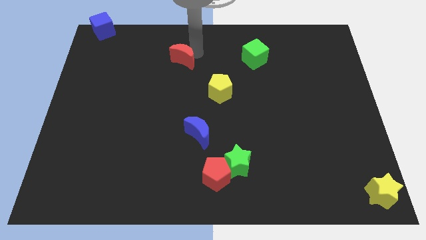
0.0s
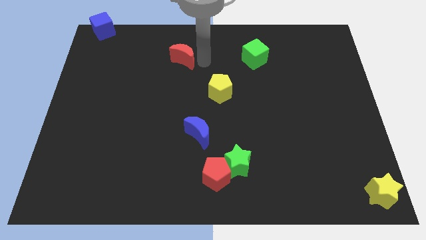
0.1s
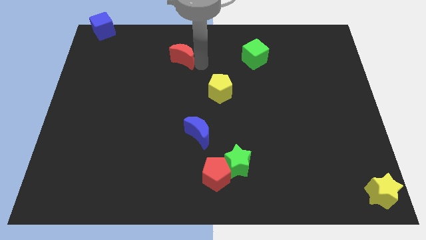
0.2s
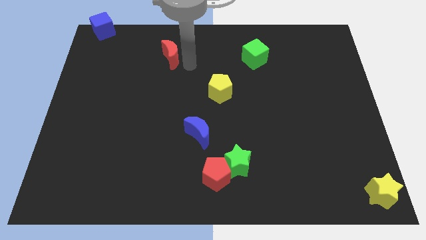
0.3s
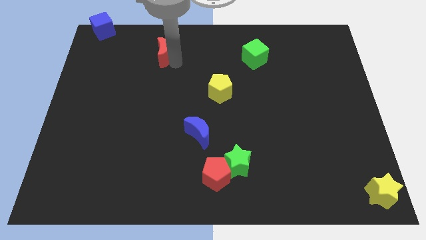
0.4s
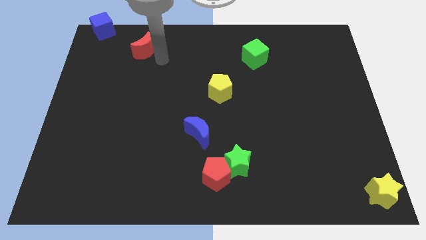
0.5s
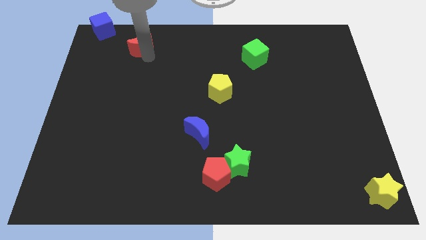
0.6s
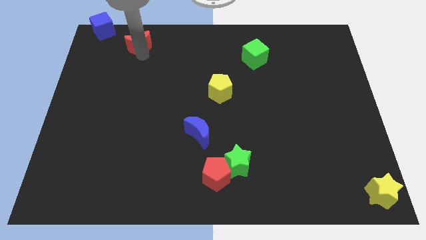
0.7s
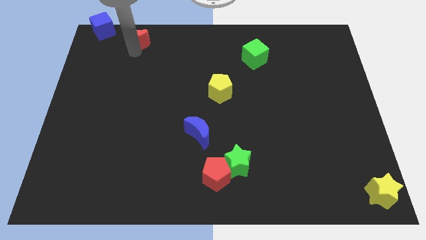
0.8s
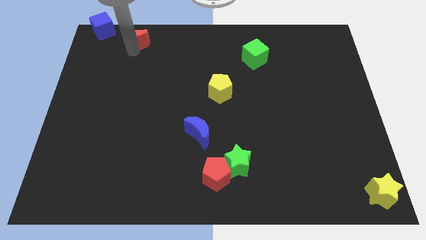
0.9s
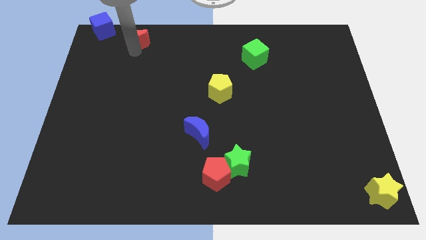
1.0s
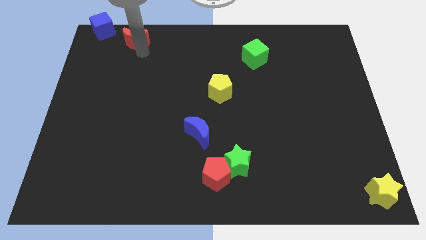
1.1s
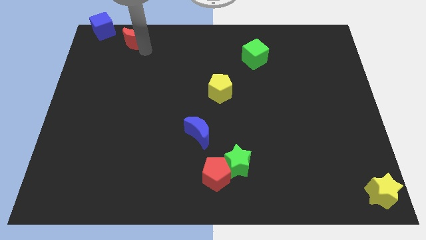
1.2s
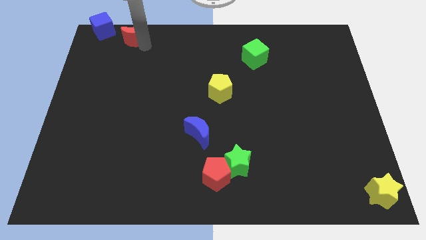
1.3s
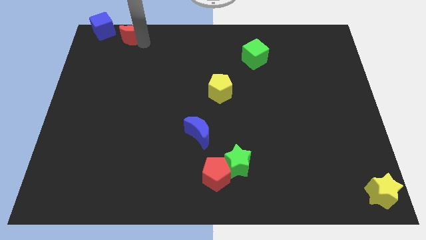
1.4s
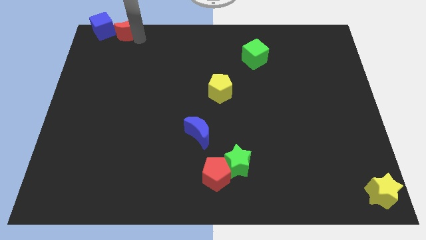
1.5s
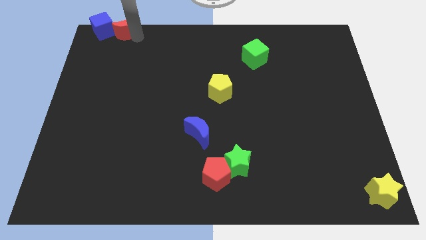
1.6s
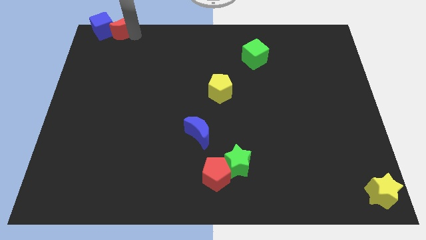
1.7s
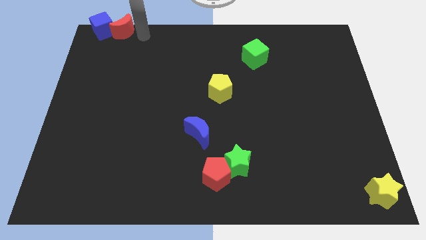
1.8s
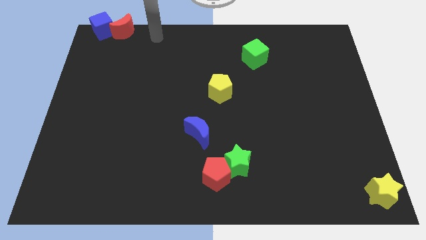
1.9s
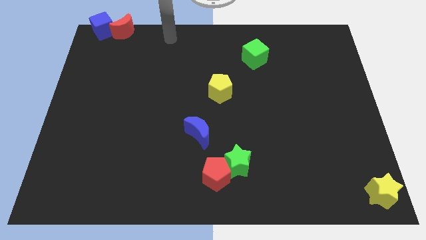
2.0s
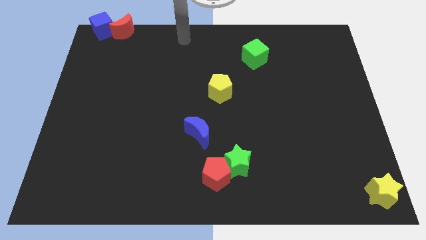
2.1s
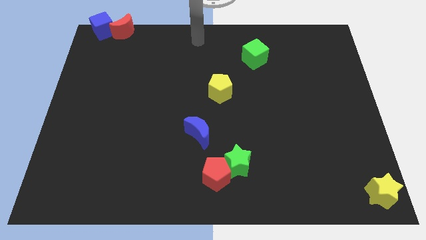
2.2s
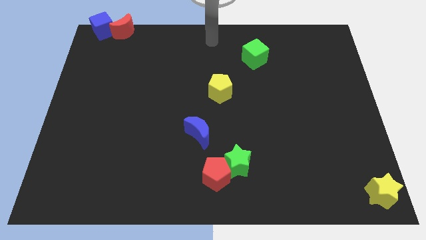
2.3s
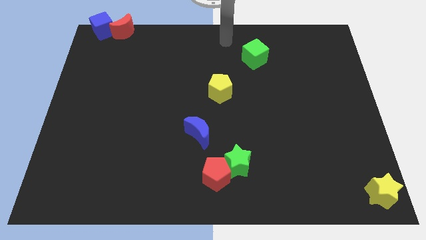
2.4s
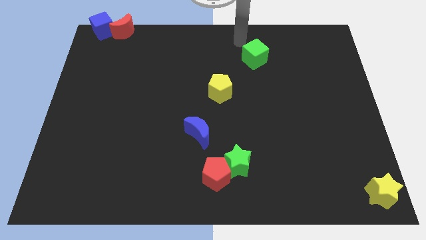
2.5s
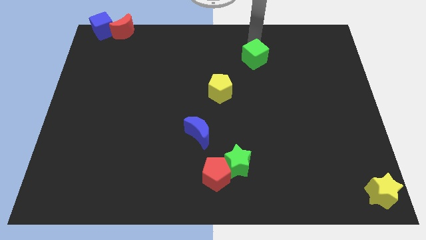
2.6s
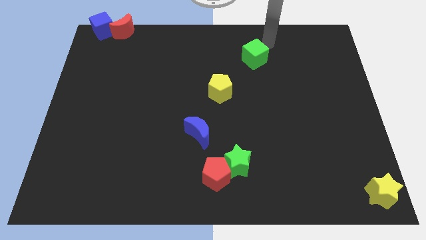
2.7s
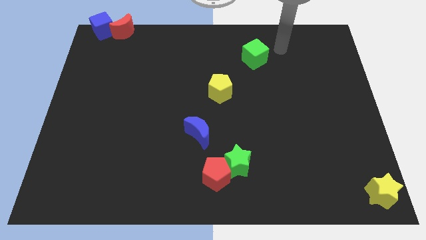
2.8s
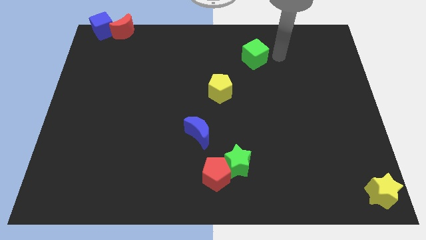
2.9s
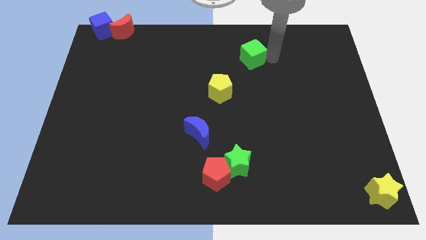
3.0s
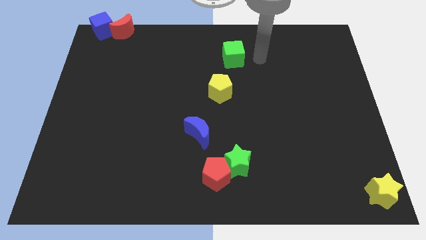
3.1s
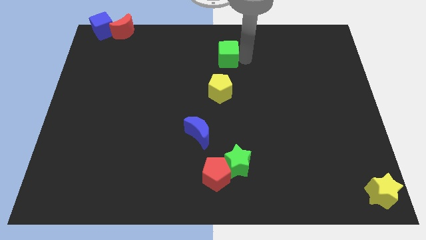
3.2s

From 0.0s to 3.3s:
place the red crescent near the blue cube

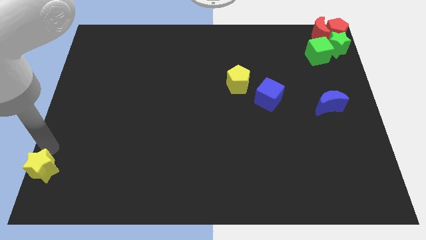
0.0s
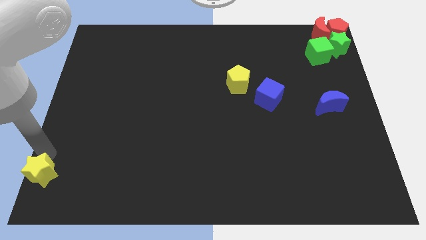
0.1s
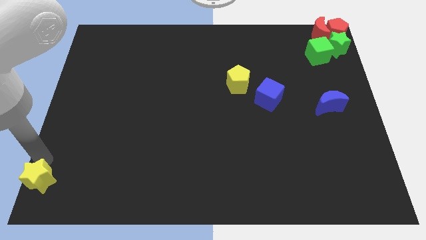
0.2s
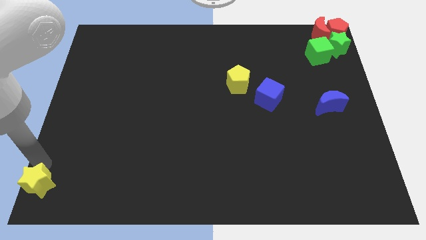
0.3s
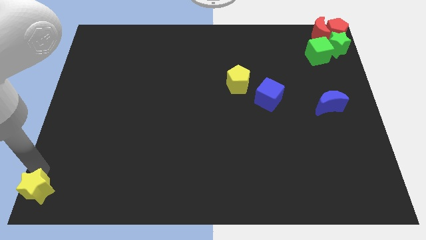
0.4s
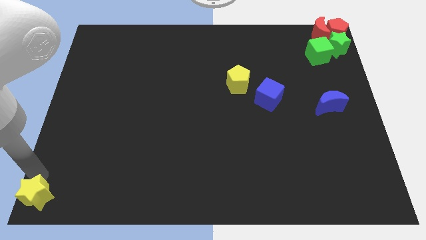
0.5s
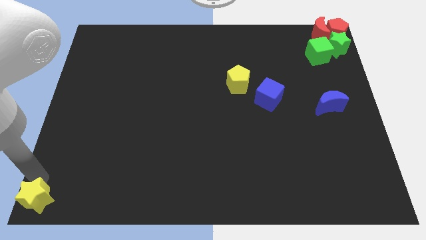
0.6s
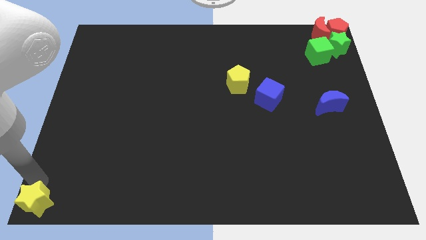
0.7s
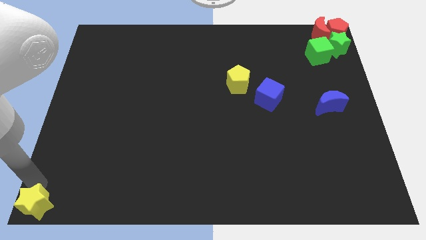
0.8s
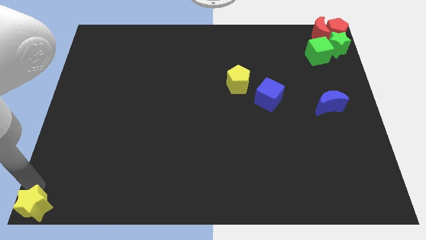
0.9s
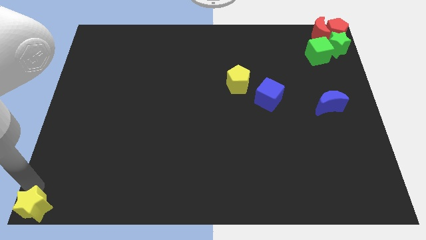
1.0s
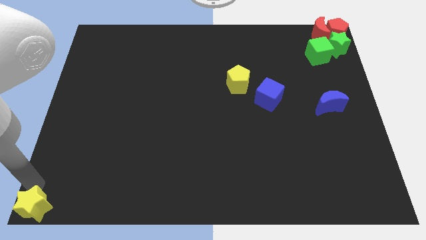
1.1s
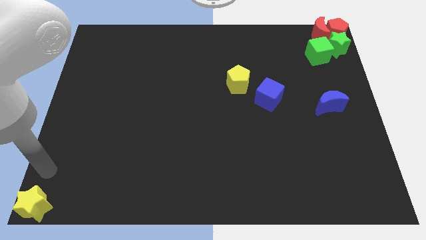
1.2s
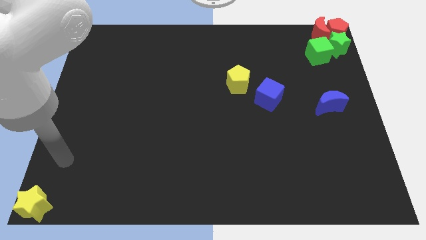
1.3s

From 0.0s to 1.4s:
move the yellow pentagon to the bottom left of the board

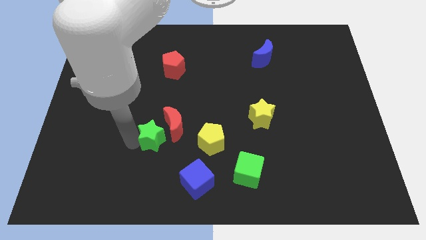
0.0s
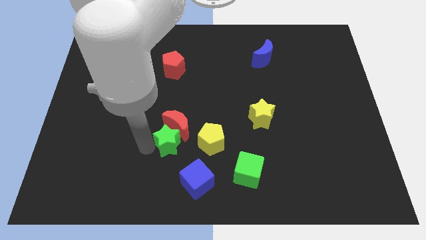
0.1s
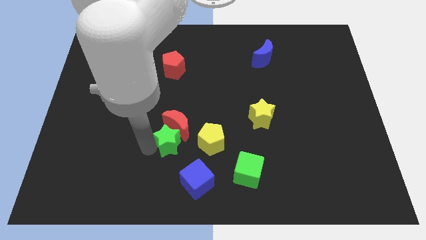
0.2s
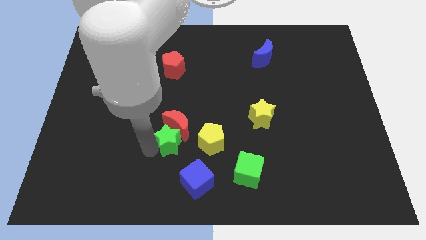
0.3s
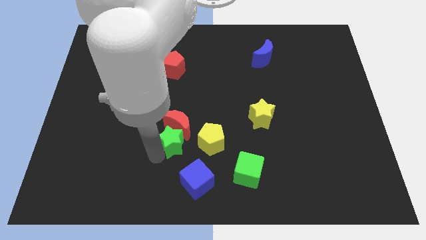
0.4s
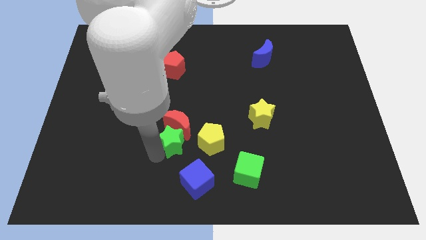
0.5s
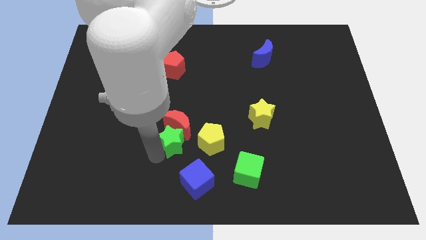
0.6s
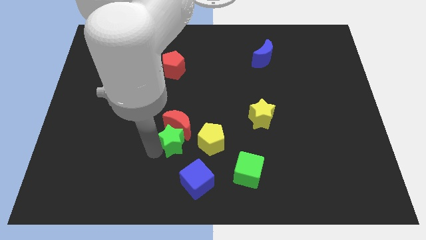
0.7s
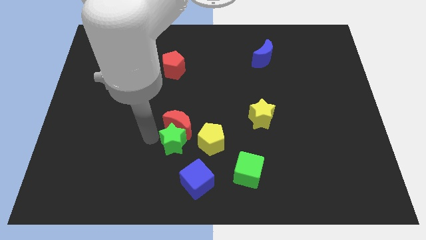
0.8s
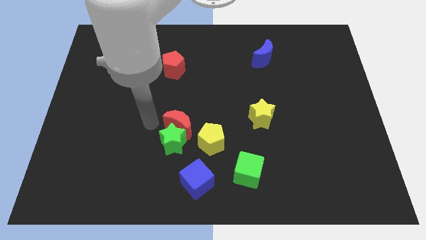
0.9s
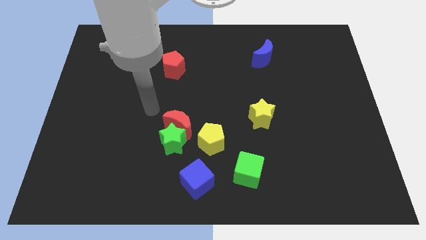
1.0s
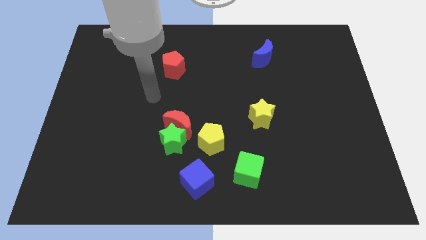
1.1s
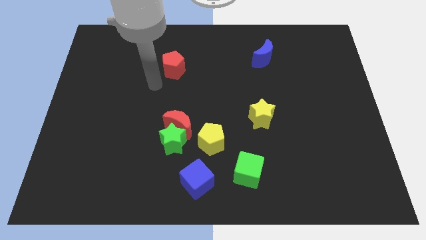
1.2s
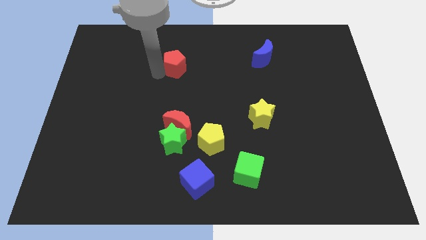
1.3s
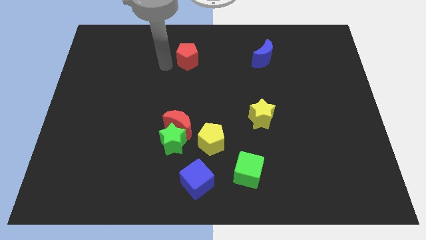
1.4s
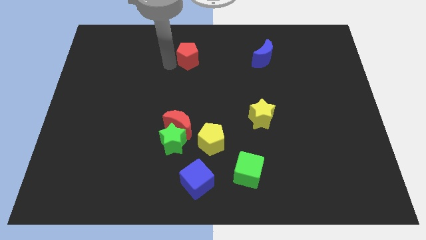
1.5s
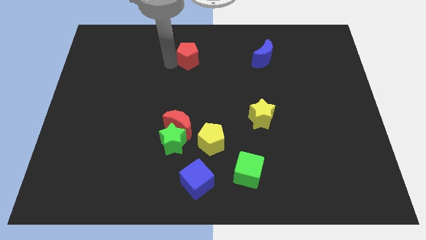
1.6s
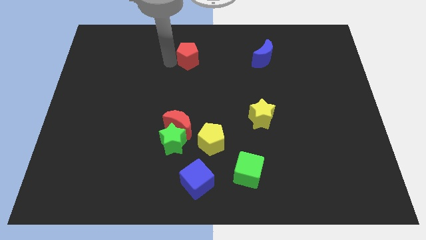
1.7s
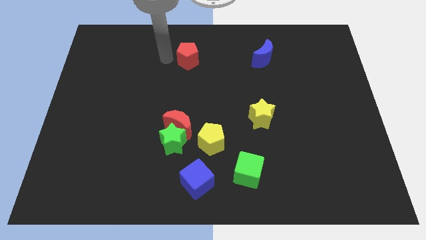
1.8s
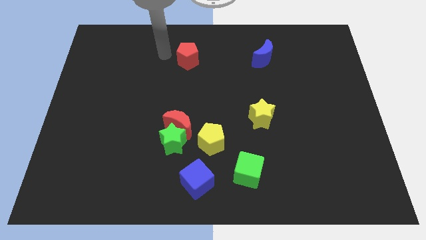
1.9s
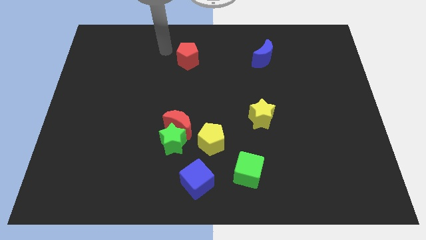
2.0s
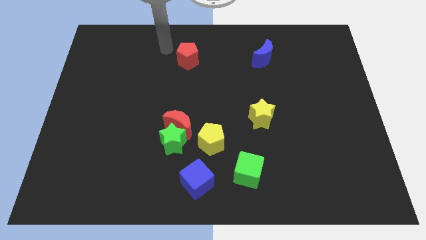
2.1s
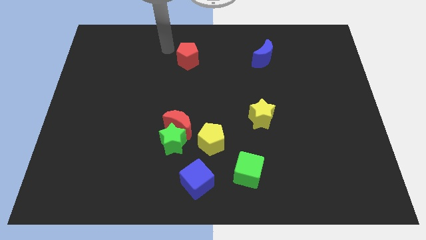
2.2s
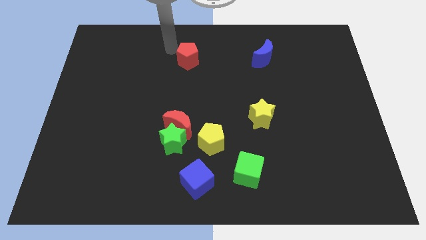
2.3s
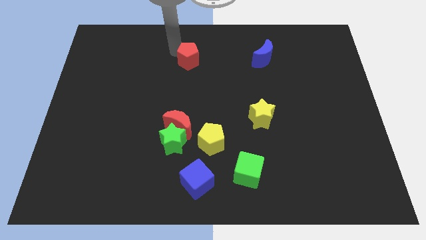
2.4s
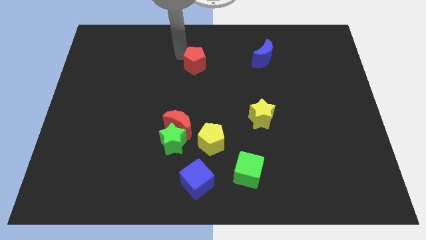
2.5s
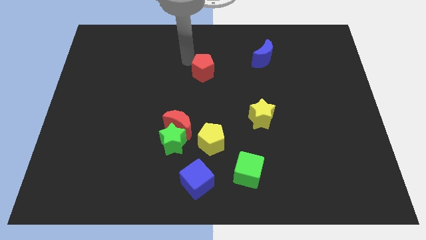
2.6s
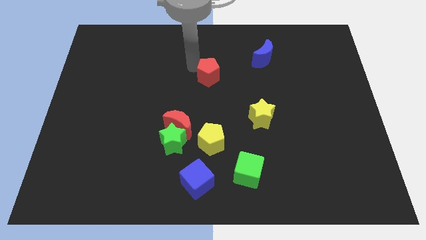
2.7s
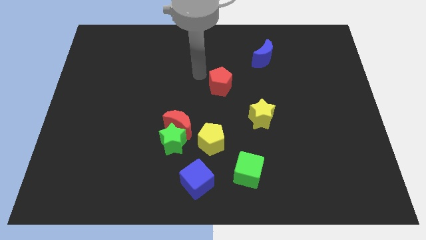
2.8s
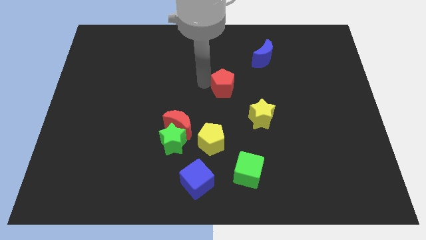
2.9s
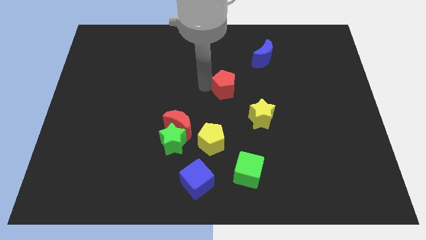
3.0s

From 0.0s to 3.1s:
push red pentagon to the center

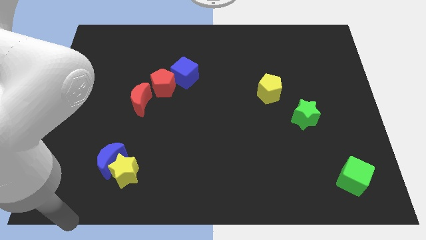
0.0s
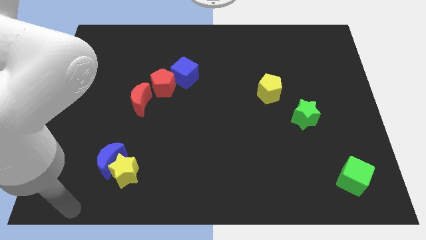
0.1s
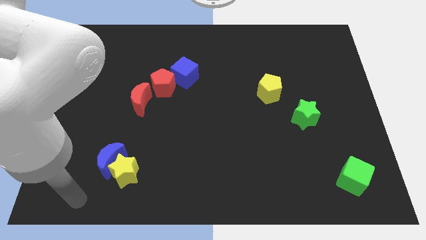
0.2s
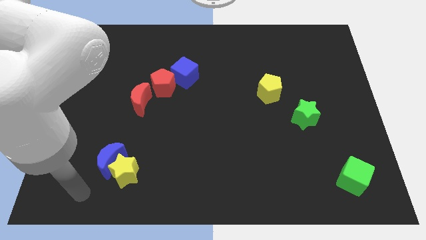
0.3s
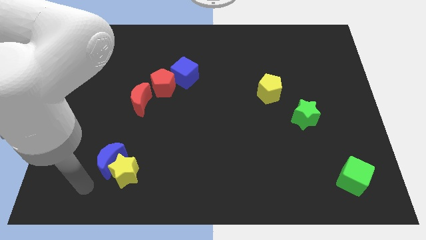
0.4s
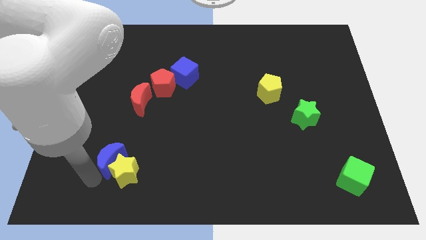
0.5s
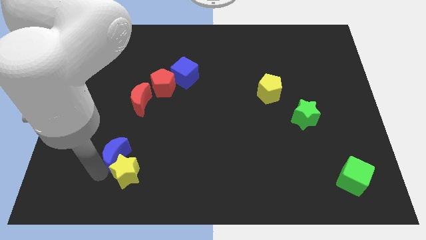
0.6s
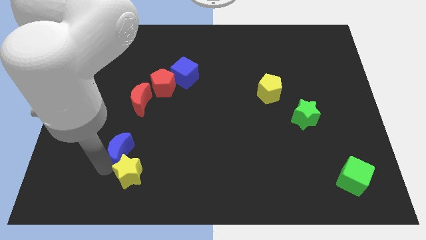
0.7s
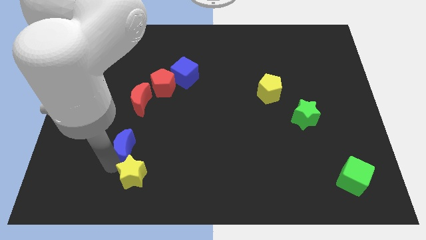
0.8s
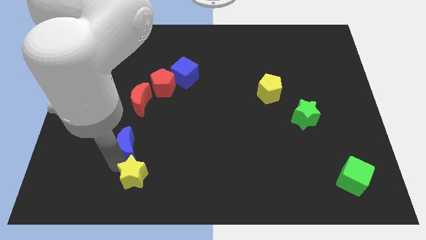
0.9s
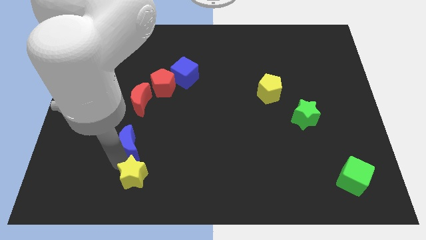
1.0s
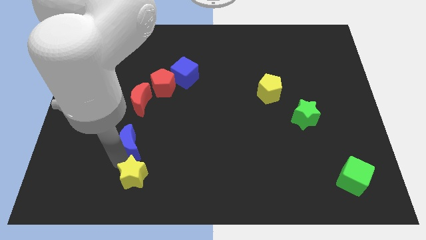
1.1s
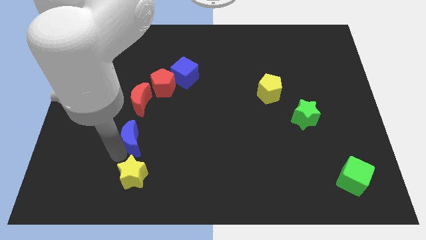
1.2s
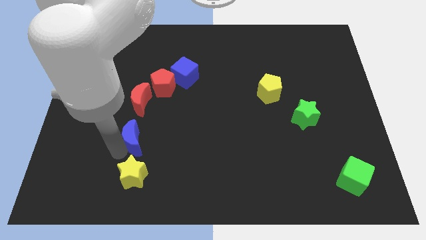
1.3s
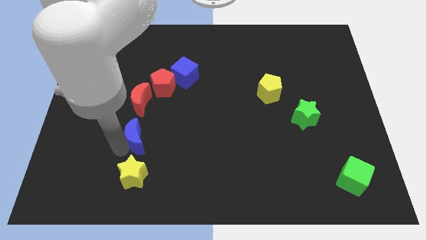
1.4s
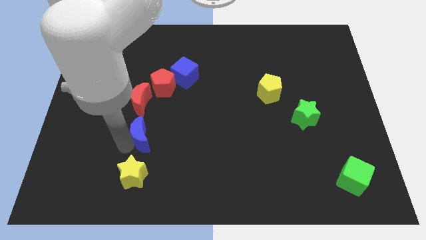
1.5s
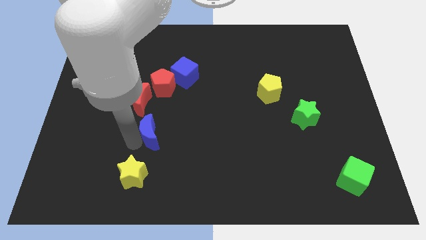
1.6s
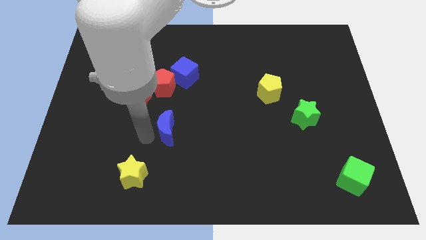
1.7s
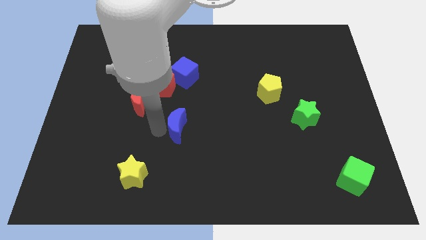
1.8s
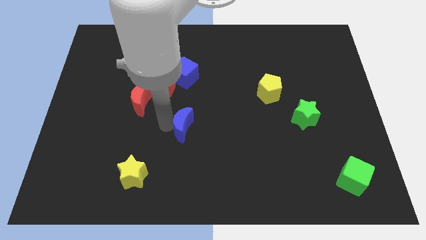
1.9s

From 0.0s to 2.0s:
separate the yellow star and blue moon
